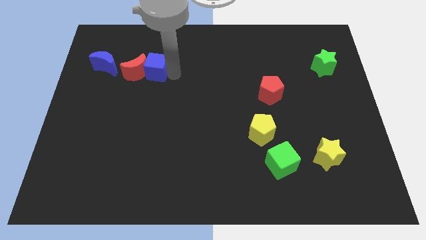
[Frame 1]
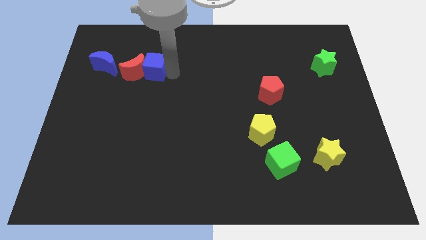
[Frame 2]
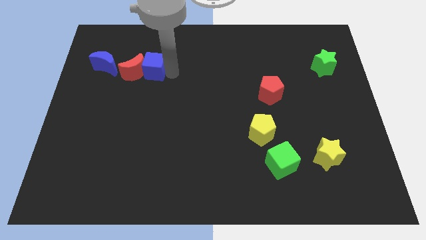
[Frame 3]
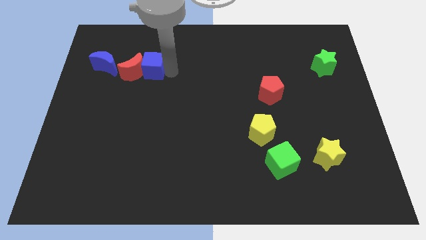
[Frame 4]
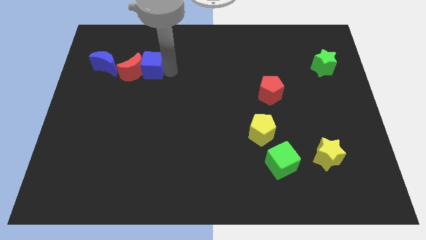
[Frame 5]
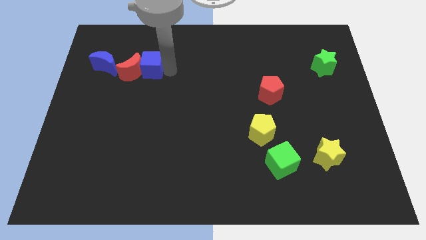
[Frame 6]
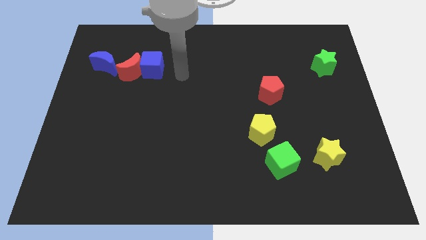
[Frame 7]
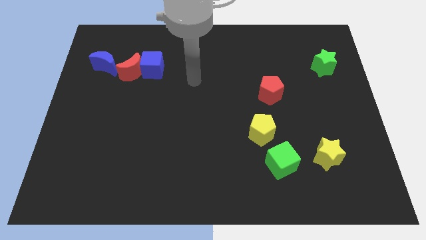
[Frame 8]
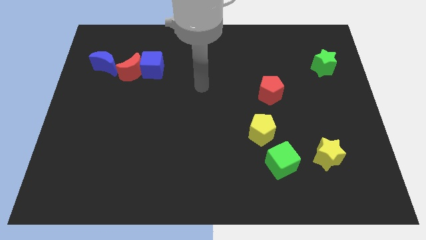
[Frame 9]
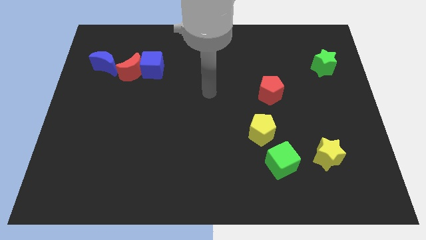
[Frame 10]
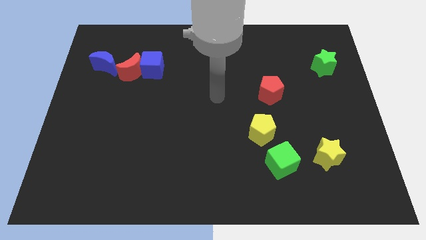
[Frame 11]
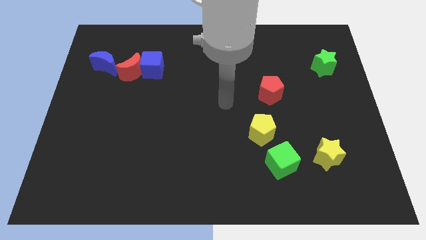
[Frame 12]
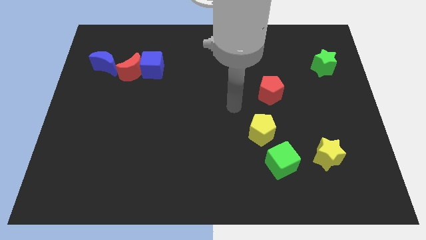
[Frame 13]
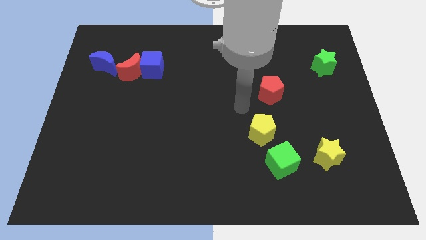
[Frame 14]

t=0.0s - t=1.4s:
move the blue cube and red moon to the right of the blue moon

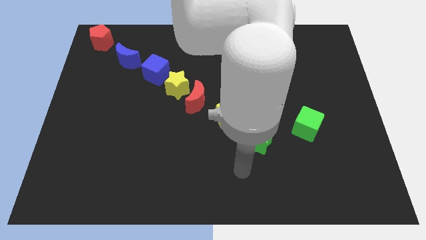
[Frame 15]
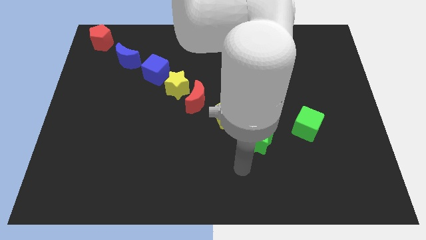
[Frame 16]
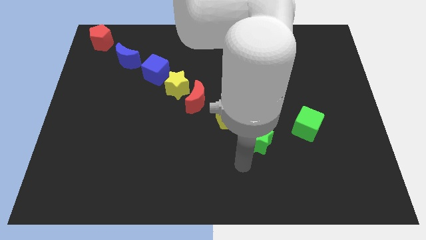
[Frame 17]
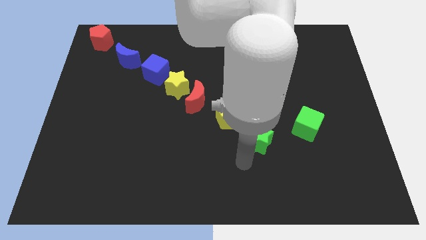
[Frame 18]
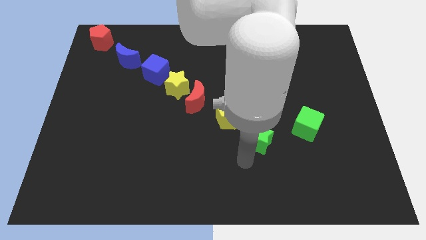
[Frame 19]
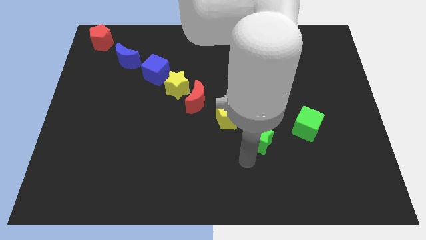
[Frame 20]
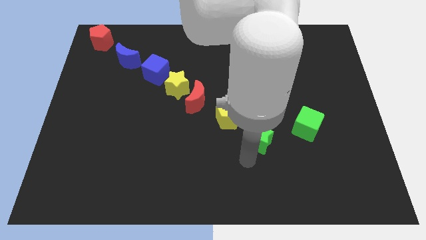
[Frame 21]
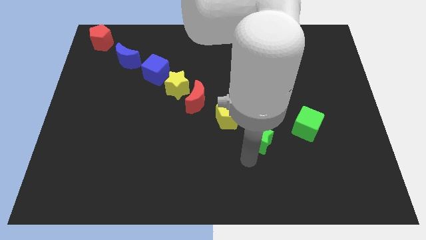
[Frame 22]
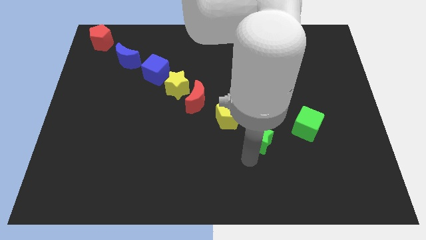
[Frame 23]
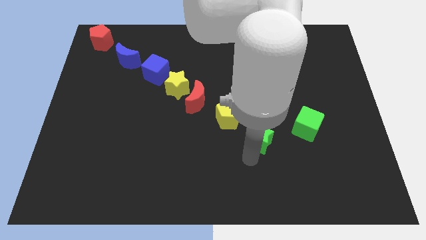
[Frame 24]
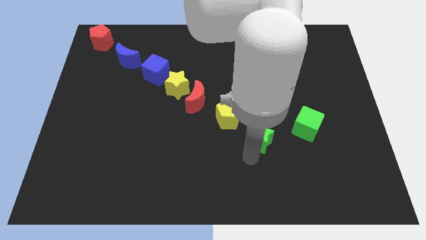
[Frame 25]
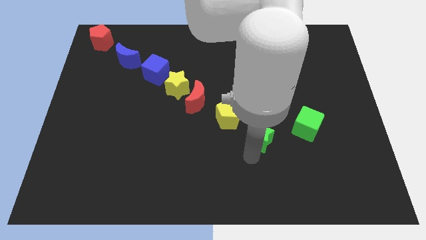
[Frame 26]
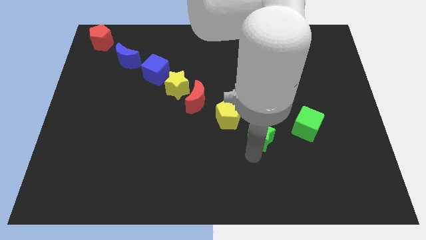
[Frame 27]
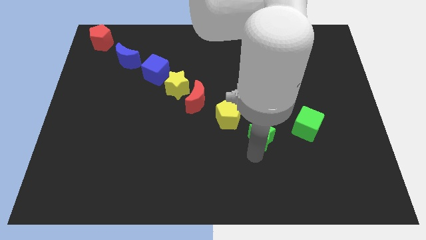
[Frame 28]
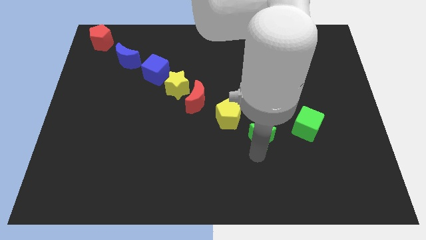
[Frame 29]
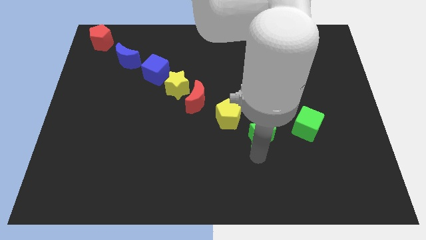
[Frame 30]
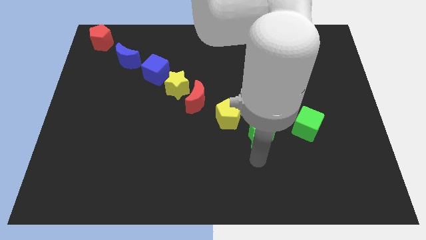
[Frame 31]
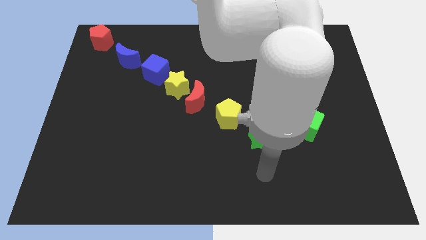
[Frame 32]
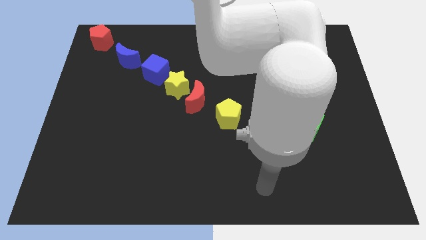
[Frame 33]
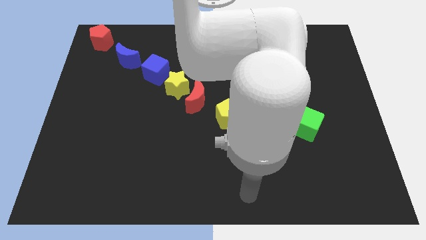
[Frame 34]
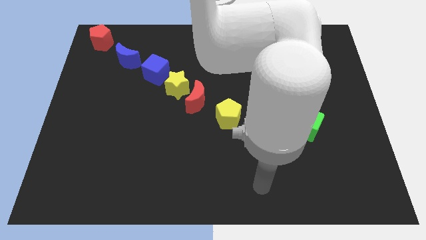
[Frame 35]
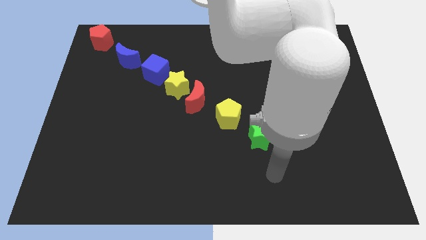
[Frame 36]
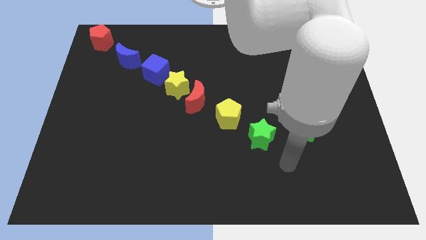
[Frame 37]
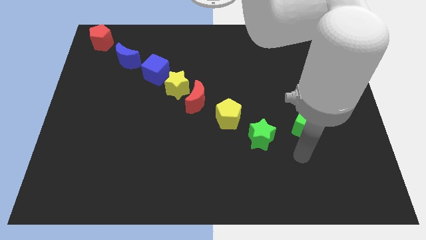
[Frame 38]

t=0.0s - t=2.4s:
push the green star related to the yellow pentagon

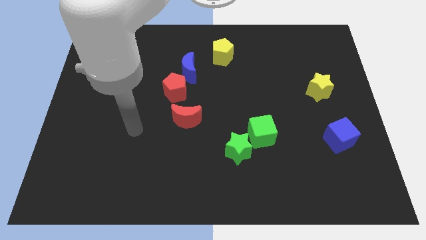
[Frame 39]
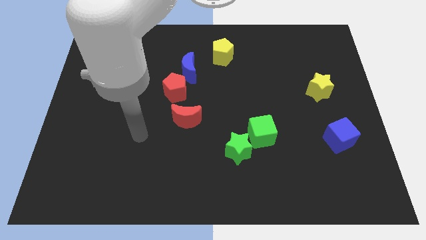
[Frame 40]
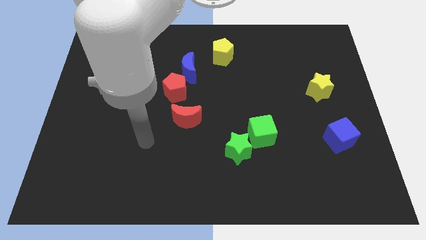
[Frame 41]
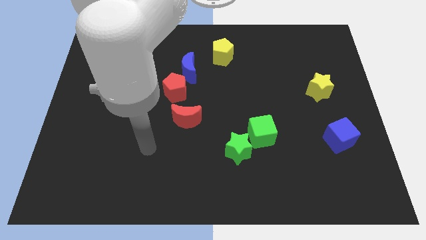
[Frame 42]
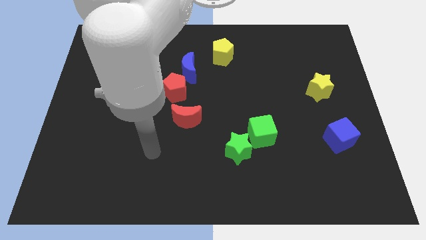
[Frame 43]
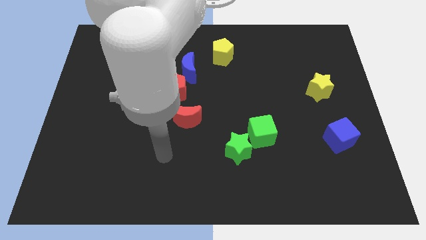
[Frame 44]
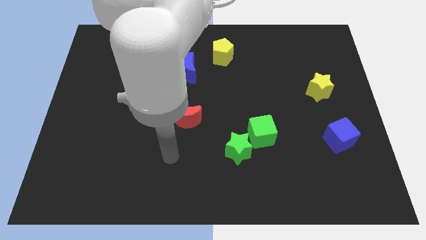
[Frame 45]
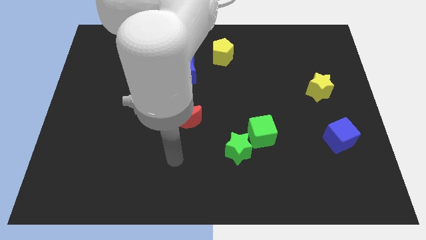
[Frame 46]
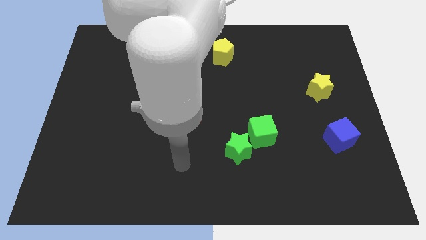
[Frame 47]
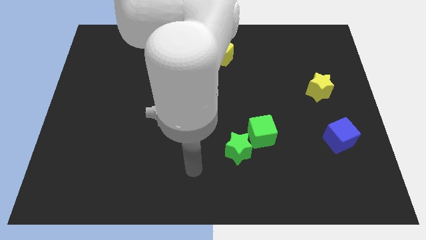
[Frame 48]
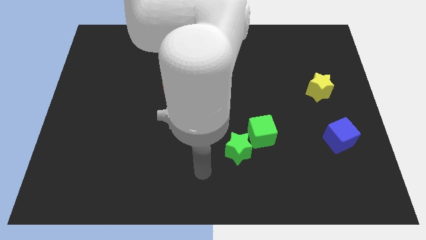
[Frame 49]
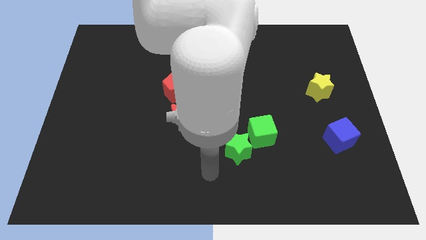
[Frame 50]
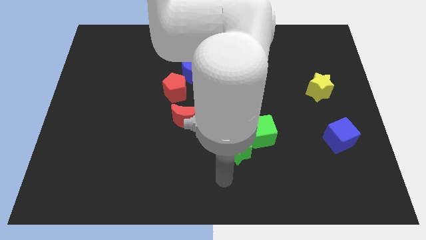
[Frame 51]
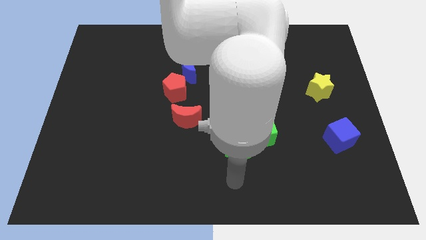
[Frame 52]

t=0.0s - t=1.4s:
move the arm to the bottom of the green star

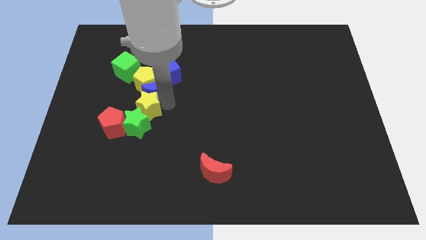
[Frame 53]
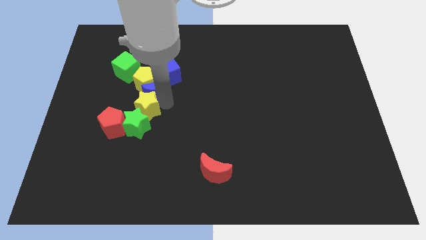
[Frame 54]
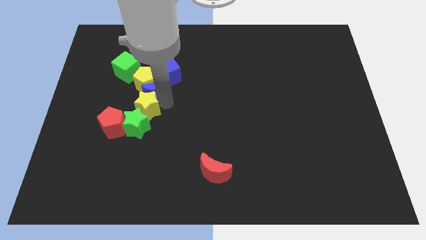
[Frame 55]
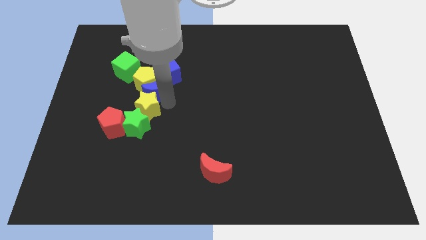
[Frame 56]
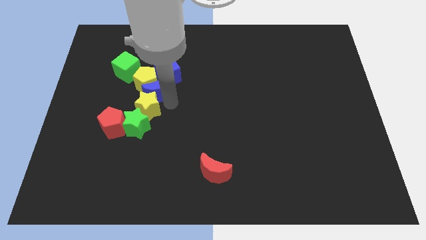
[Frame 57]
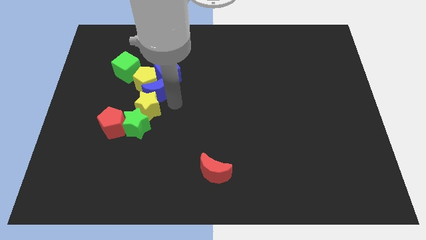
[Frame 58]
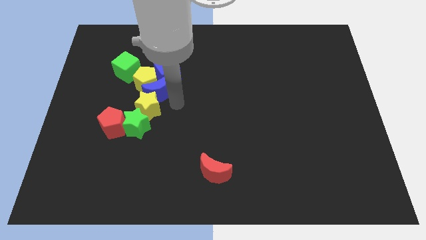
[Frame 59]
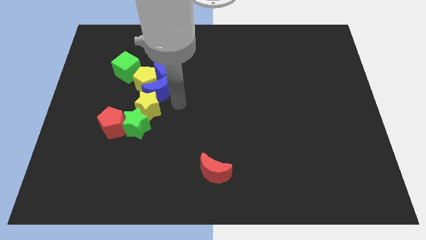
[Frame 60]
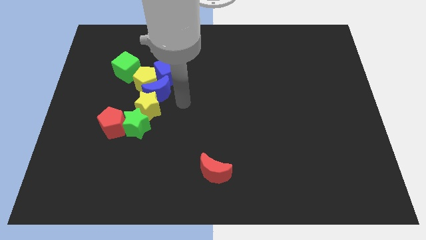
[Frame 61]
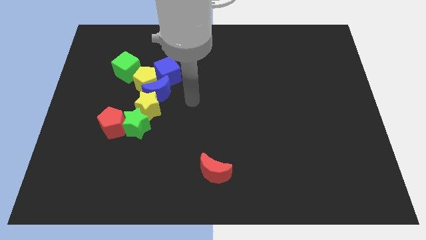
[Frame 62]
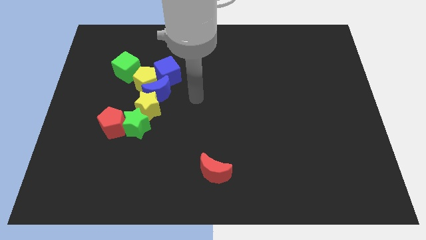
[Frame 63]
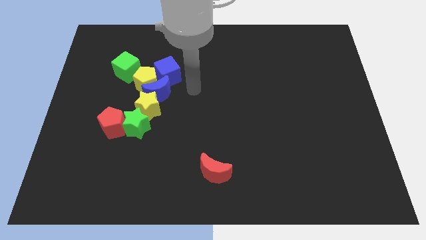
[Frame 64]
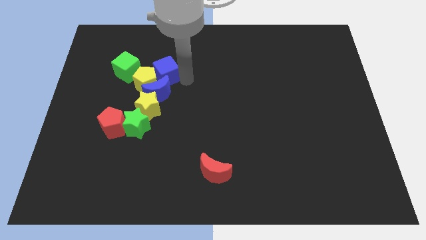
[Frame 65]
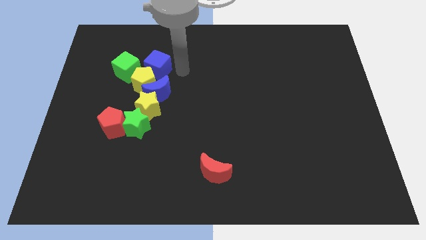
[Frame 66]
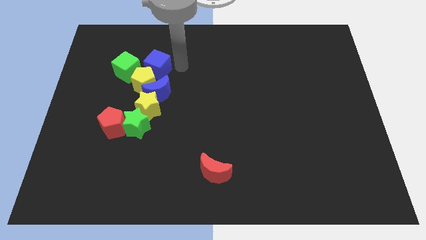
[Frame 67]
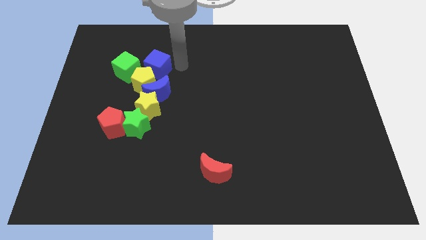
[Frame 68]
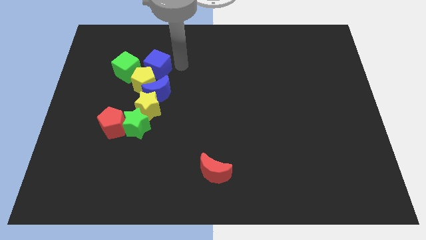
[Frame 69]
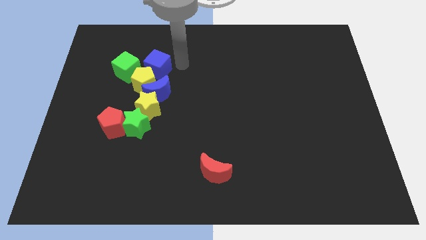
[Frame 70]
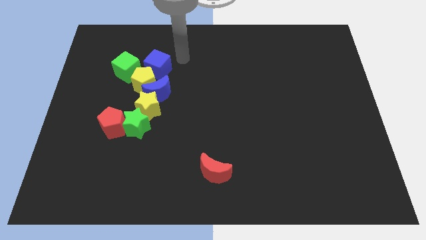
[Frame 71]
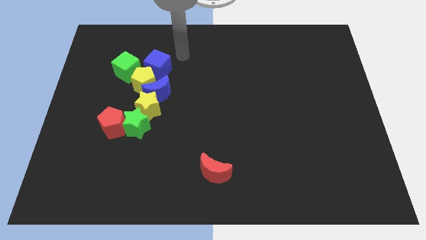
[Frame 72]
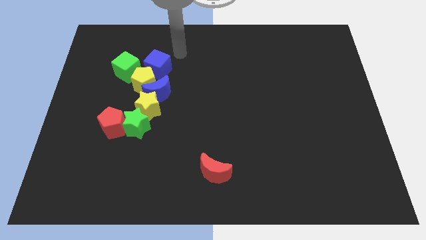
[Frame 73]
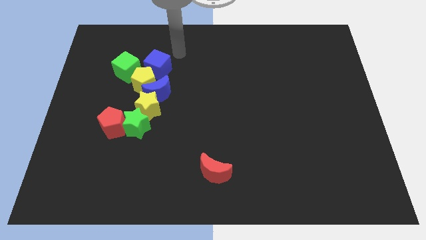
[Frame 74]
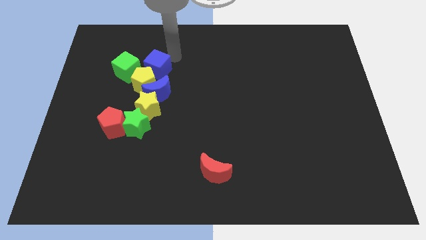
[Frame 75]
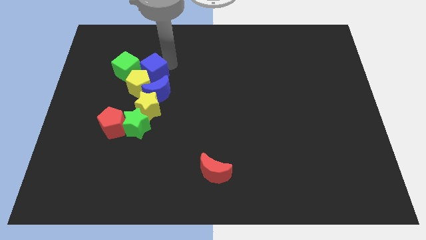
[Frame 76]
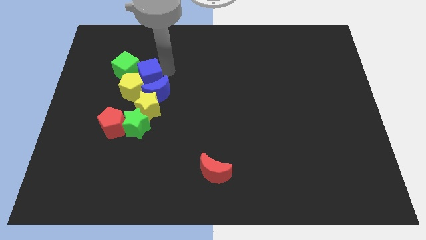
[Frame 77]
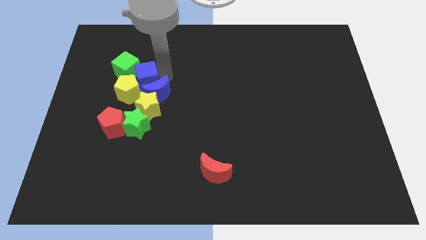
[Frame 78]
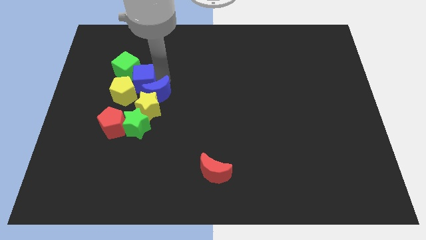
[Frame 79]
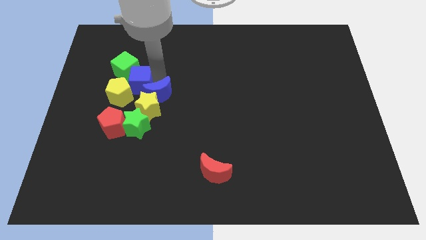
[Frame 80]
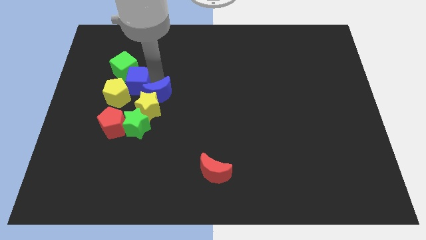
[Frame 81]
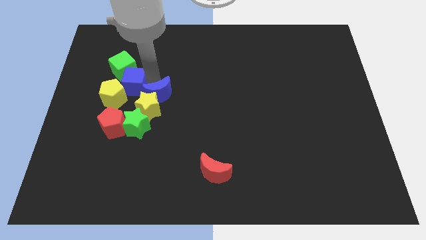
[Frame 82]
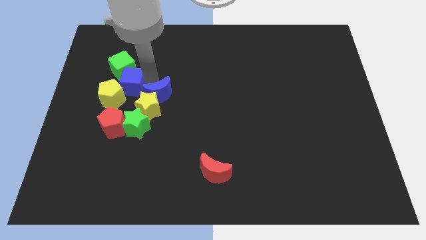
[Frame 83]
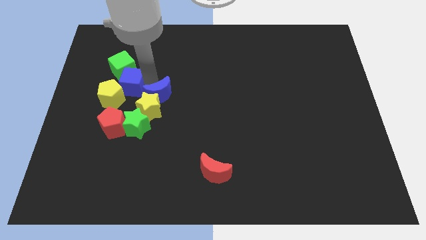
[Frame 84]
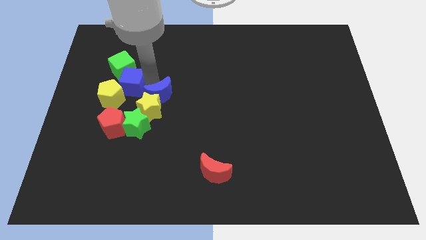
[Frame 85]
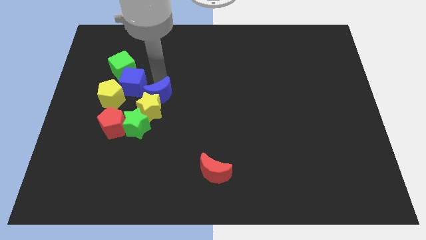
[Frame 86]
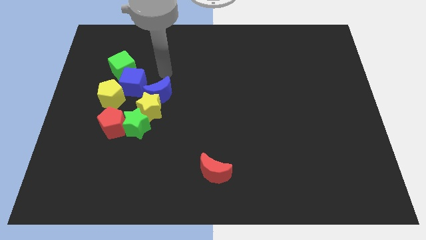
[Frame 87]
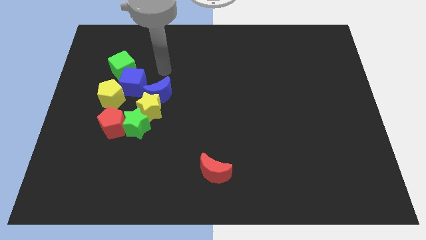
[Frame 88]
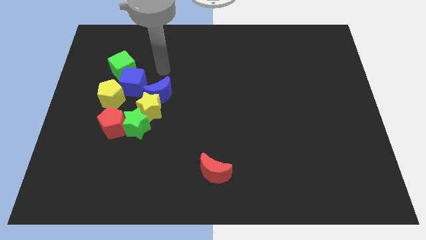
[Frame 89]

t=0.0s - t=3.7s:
push the blue cube along the yellow pentagon to the top of the red pentagon
